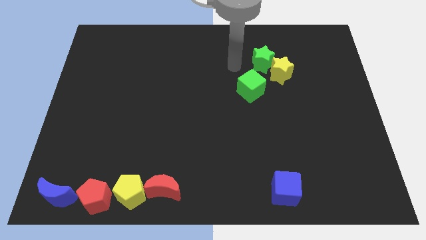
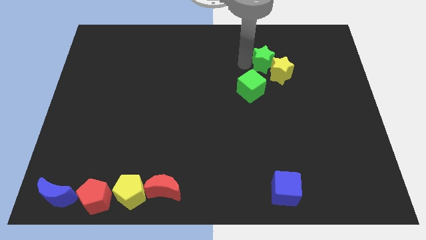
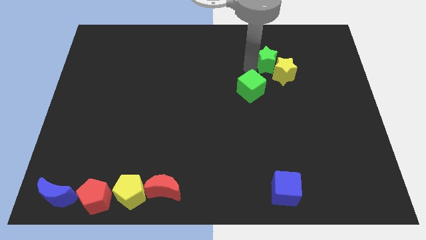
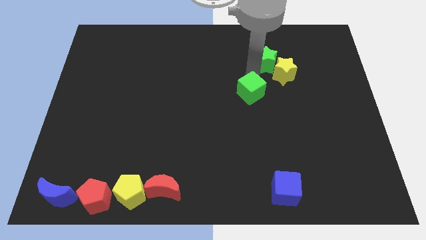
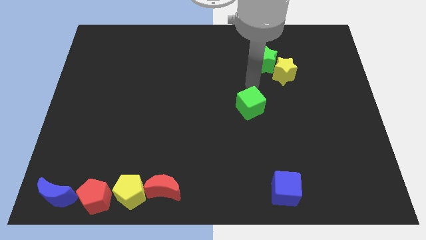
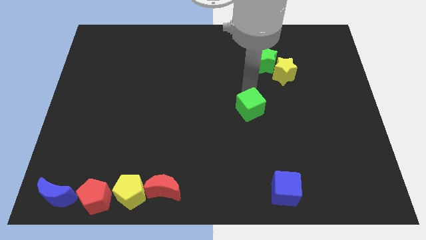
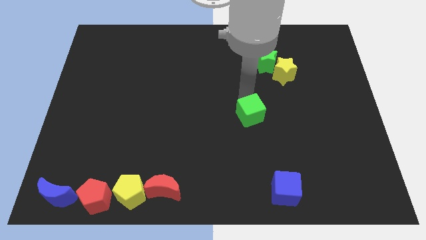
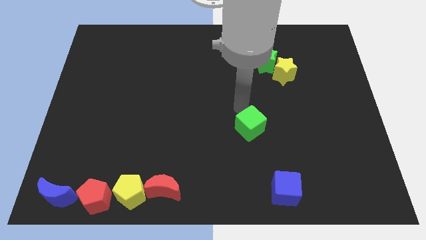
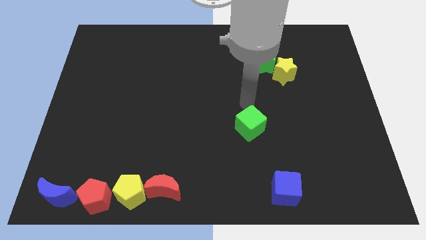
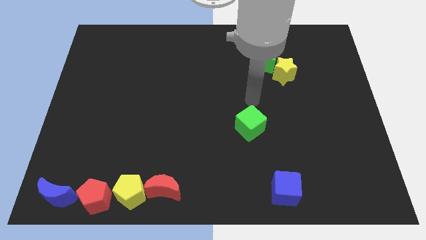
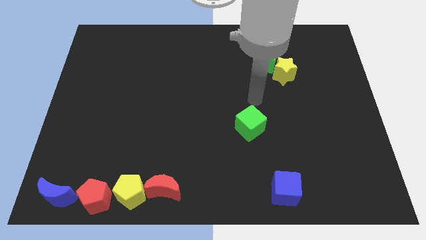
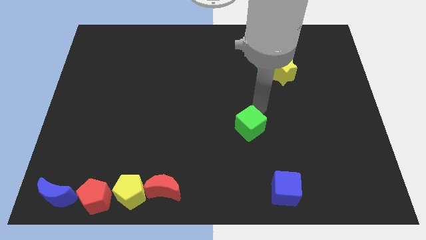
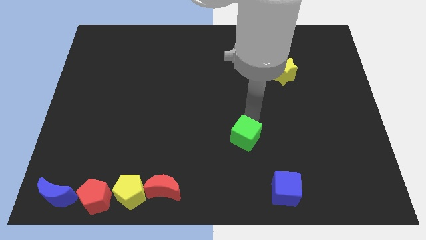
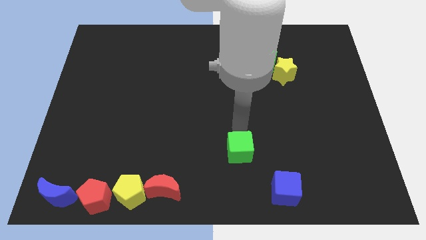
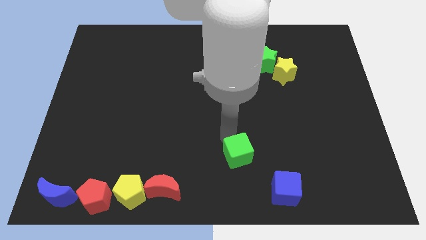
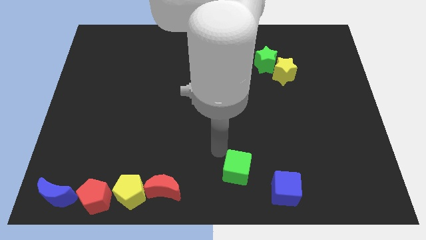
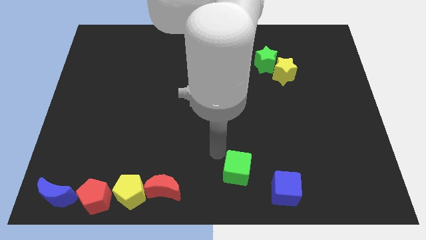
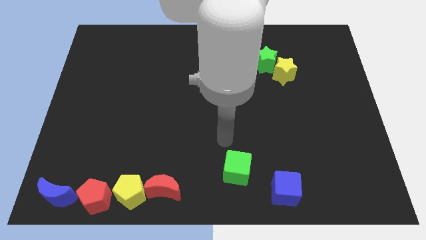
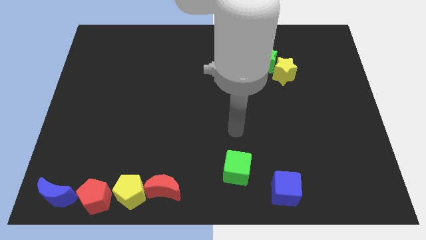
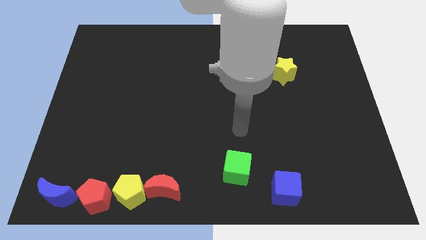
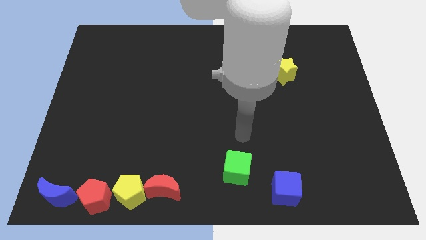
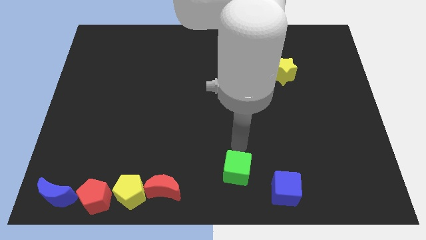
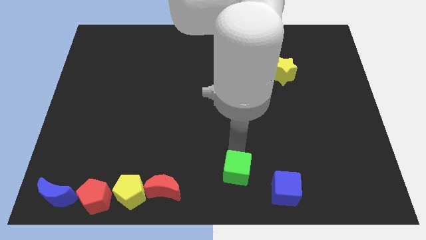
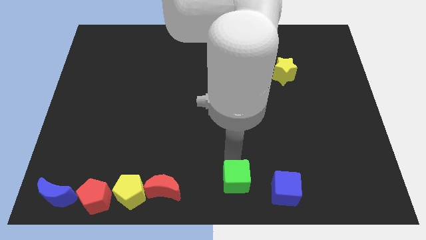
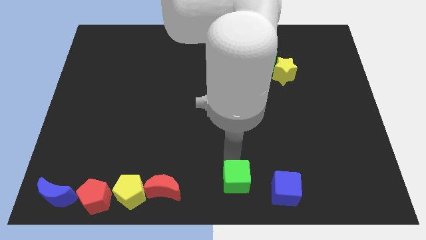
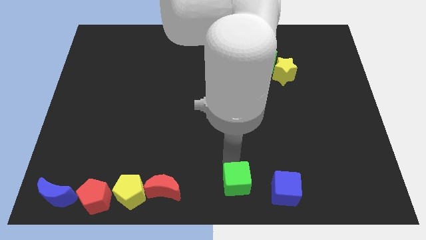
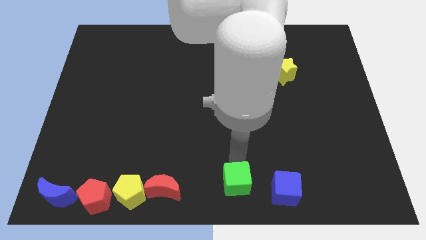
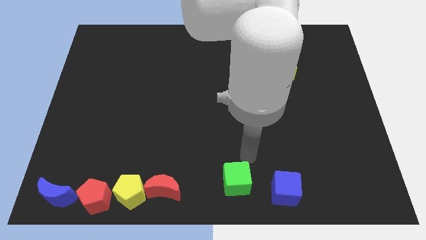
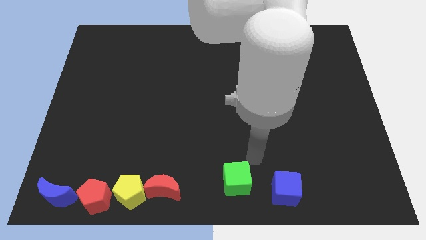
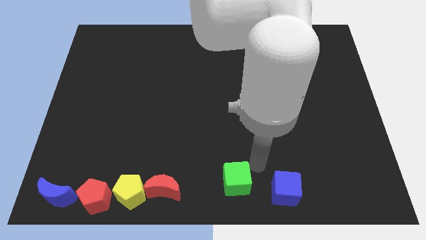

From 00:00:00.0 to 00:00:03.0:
move green cube from green star

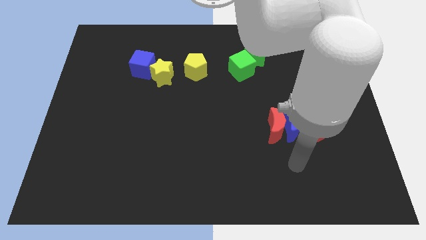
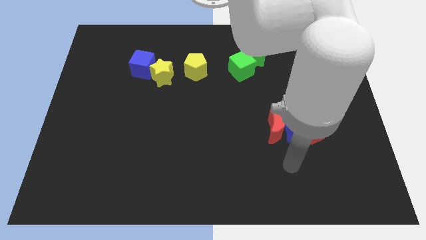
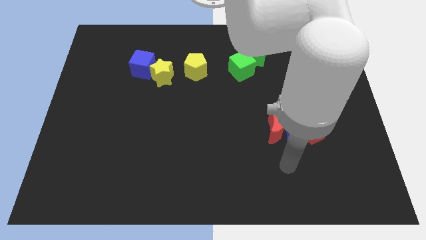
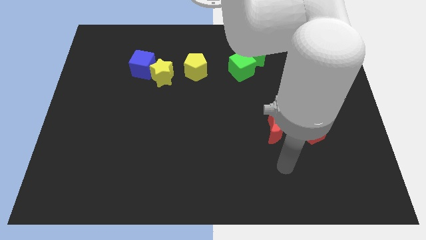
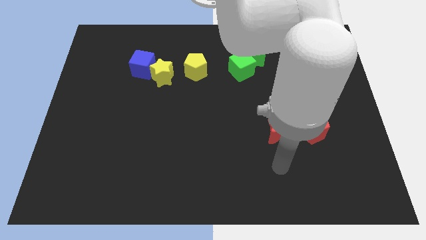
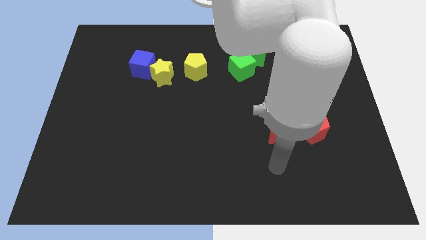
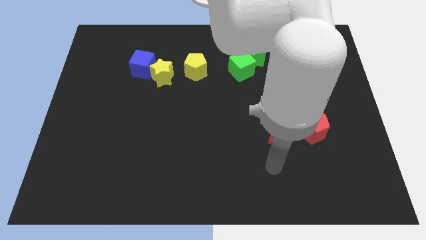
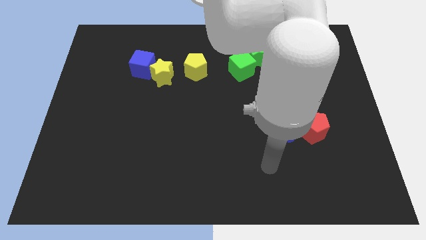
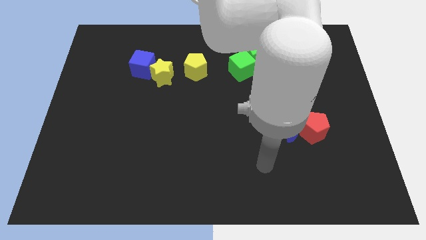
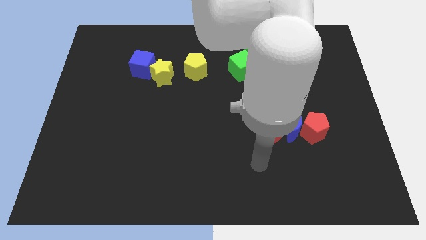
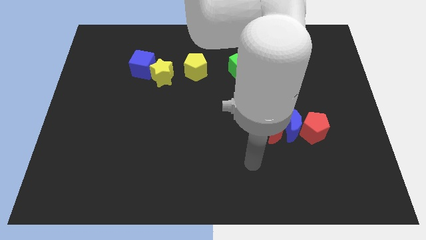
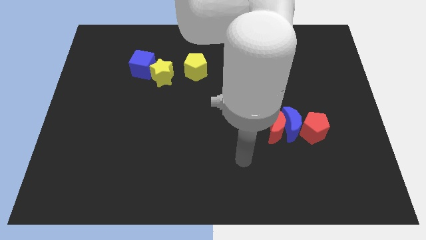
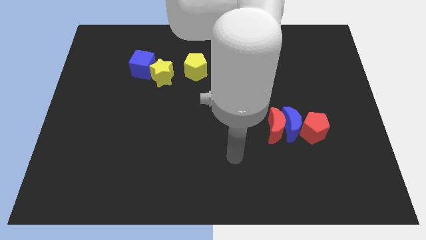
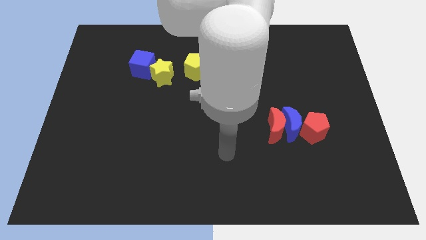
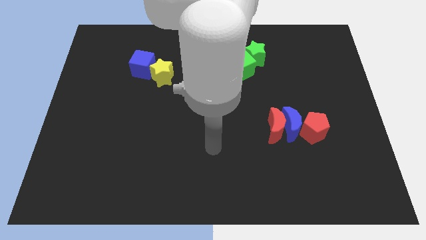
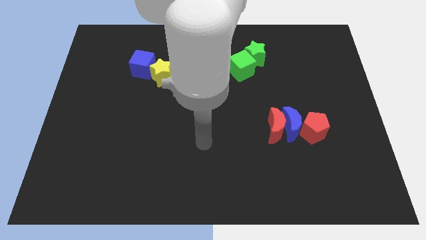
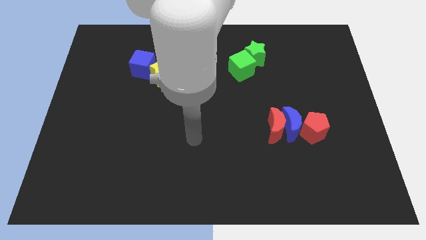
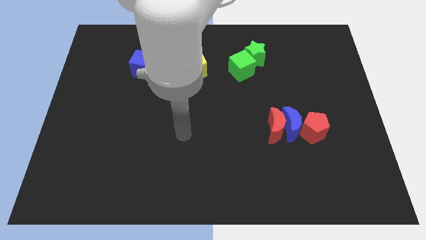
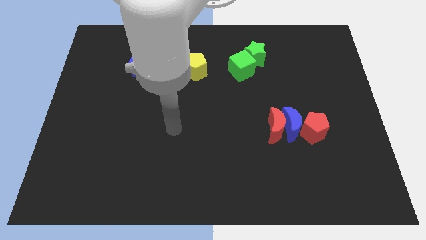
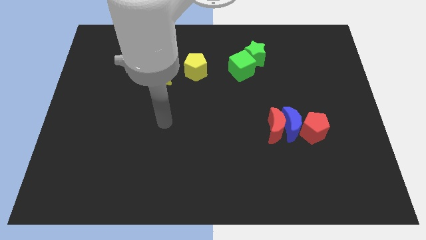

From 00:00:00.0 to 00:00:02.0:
move your arm away from the red pentagon

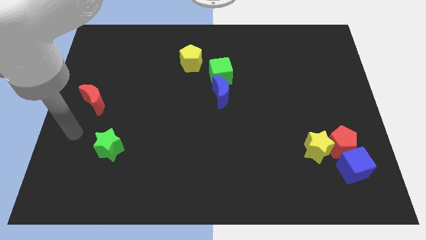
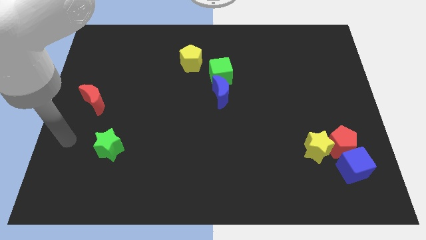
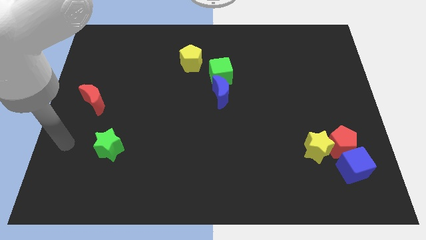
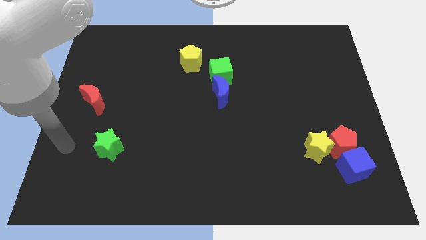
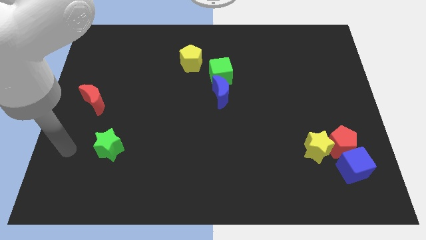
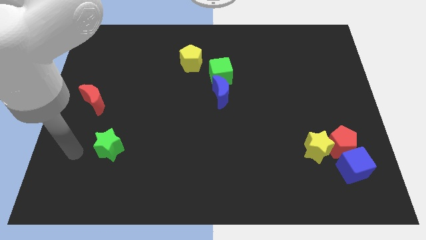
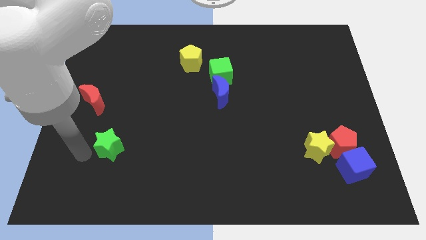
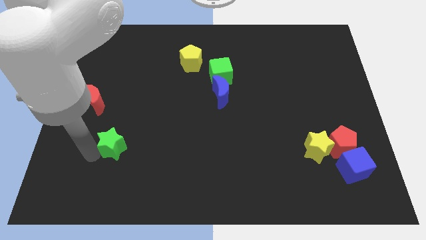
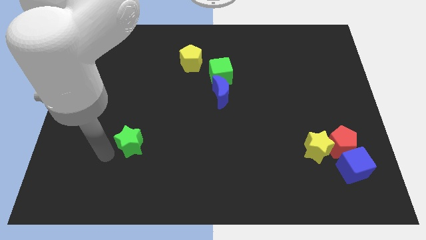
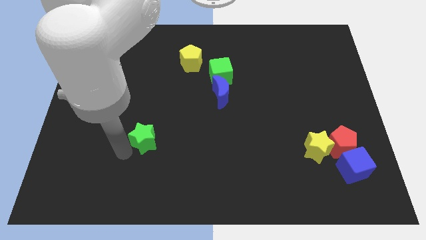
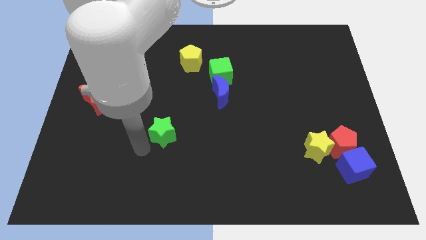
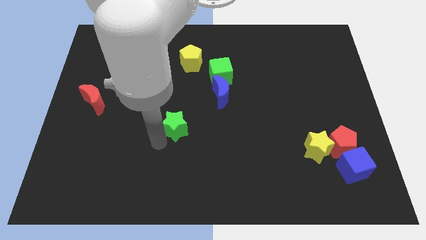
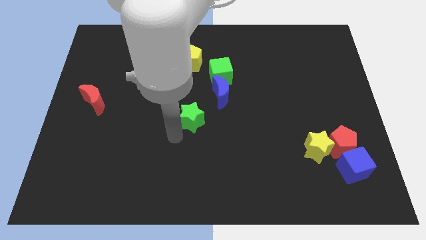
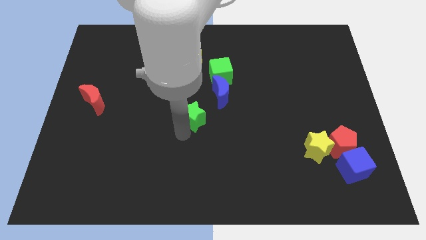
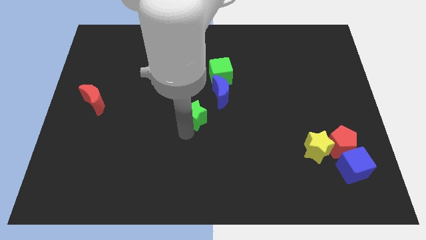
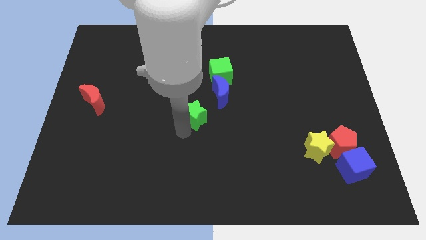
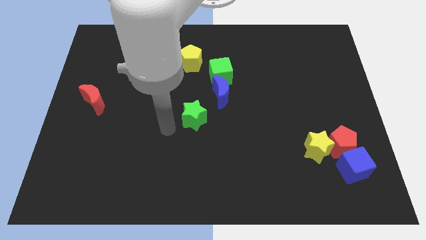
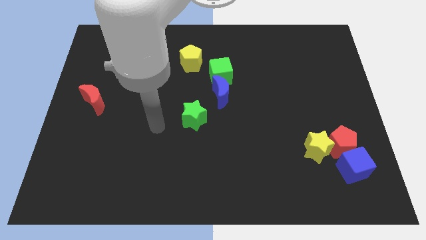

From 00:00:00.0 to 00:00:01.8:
move the green star to the center

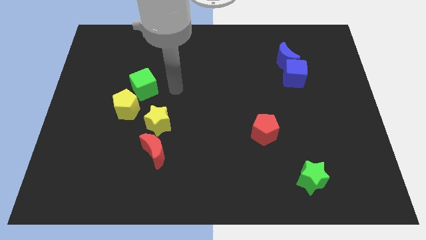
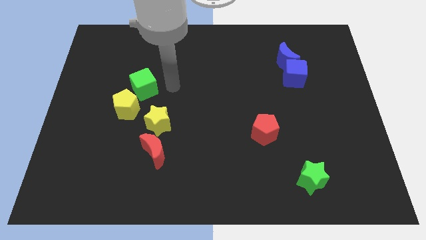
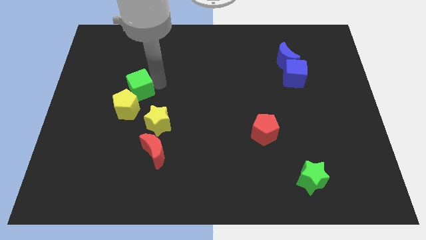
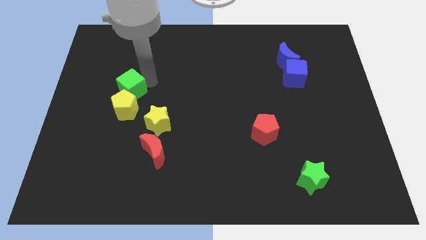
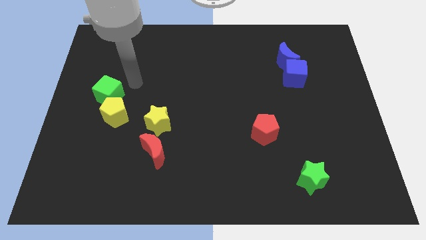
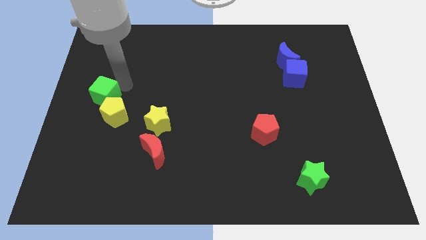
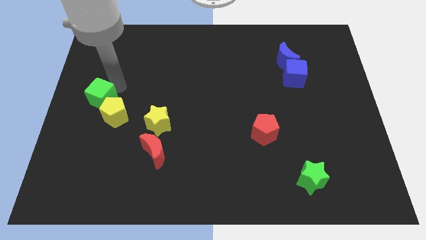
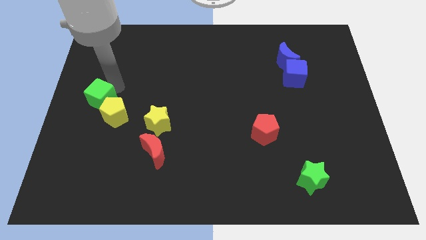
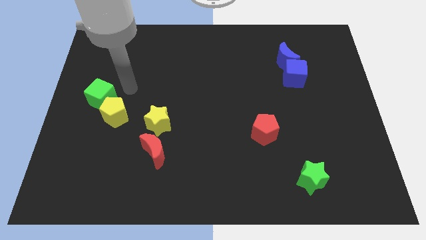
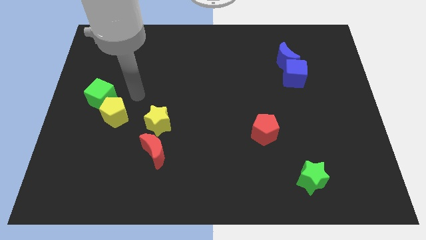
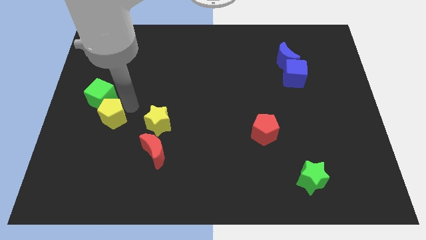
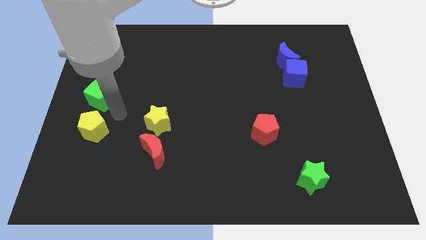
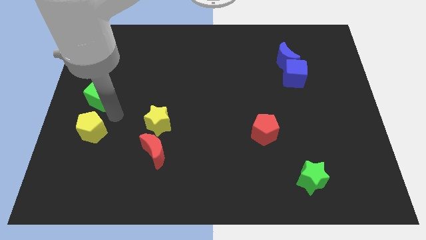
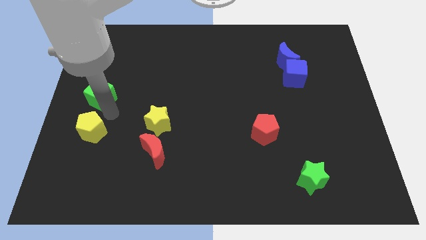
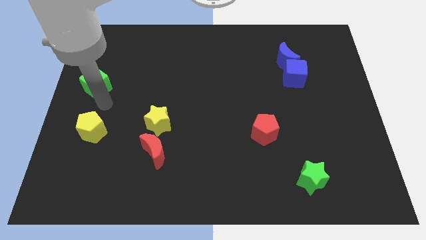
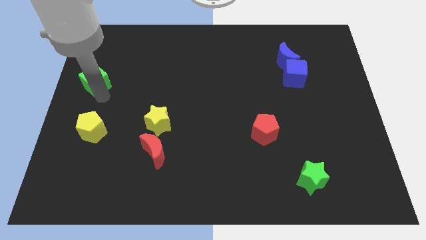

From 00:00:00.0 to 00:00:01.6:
separate green cube and the yellow pentagon

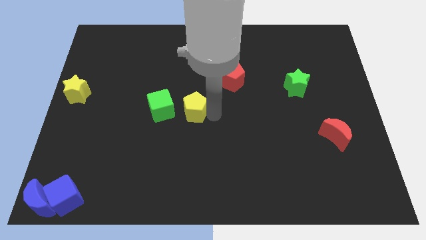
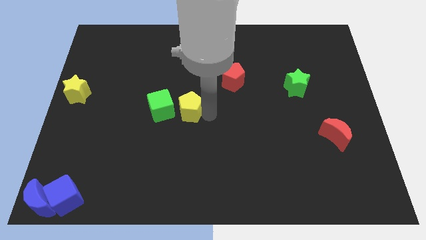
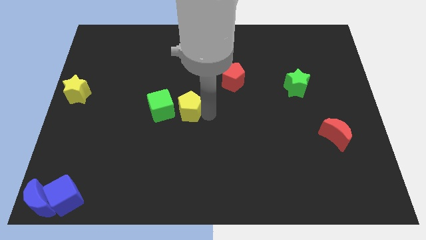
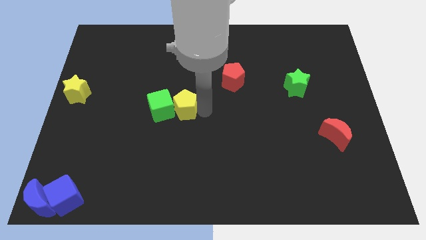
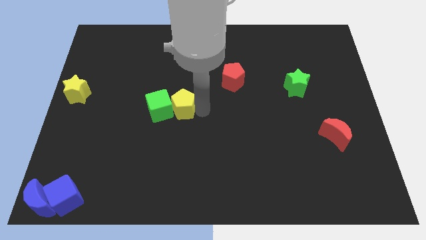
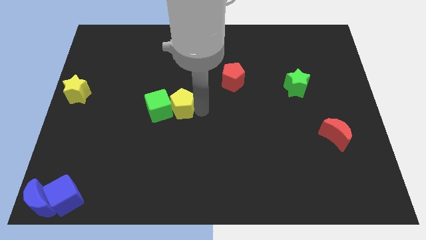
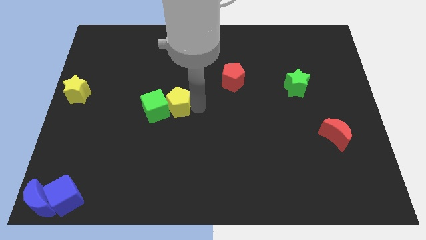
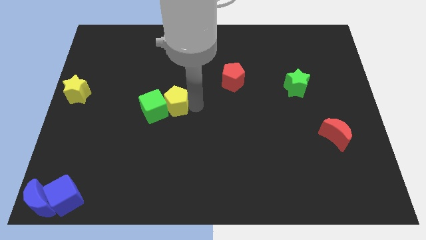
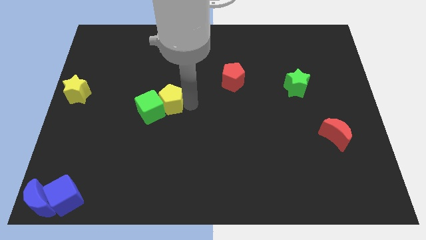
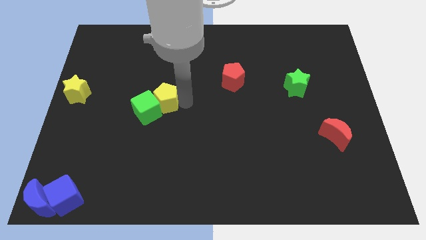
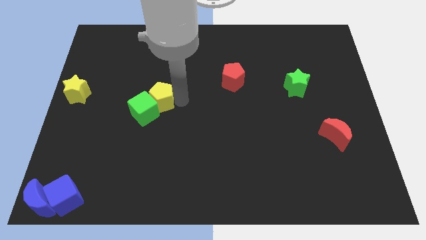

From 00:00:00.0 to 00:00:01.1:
push the yellow pentagon into the green cube
